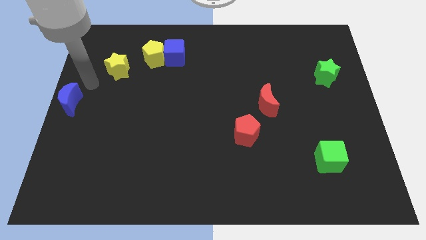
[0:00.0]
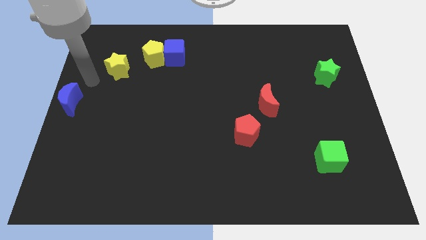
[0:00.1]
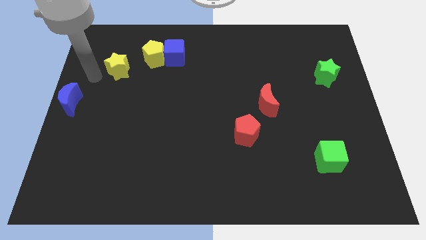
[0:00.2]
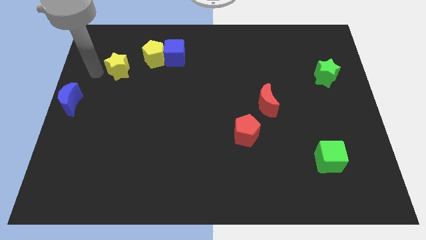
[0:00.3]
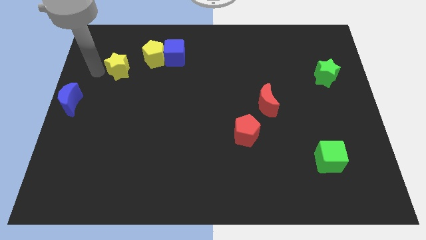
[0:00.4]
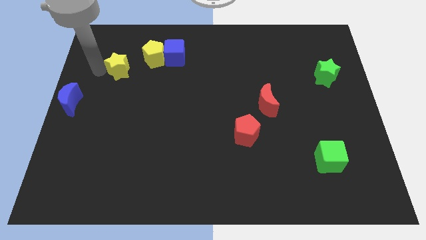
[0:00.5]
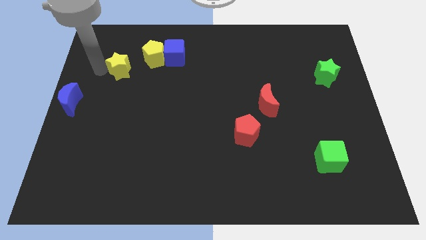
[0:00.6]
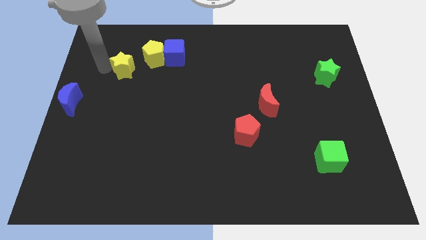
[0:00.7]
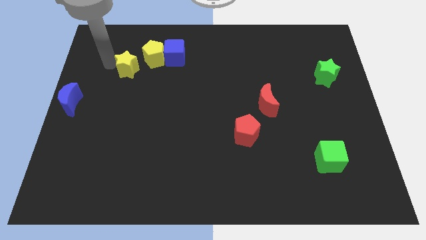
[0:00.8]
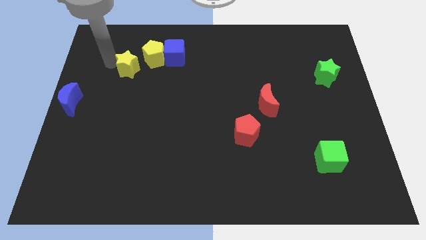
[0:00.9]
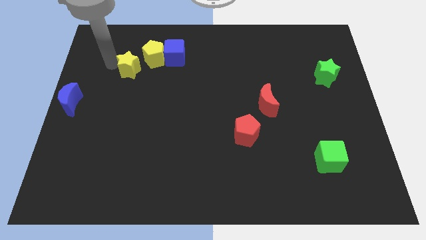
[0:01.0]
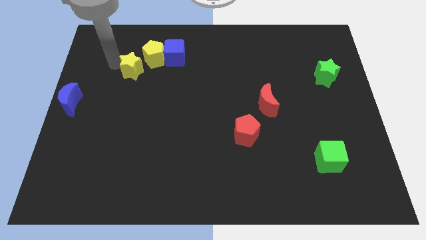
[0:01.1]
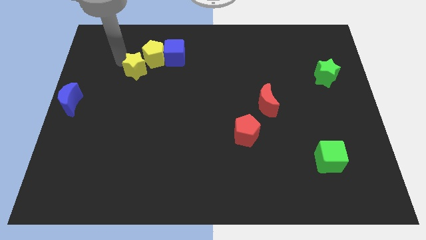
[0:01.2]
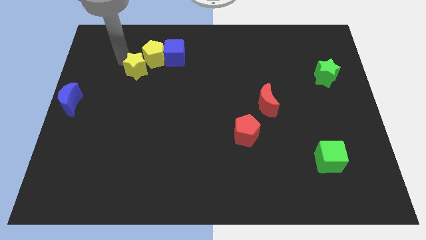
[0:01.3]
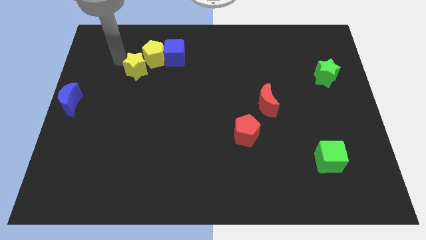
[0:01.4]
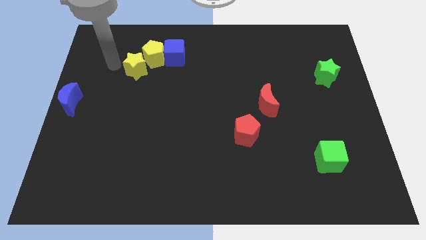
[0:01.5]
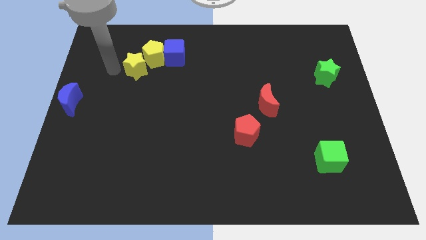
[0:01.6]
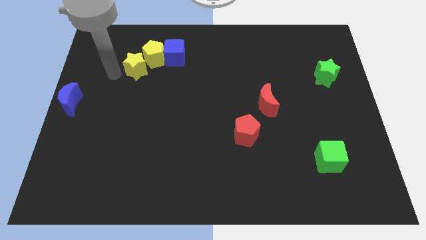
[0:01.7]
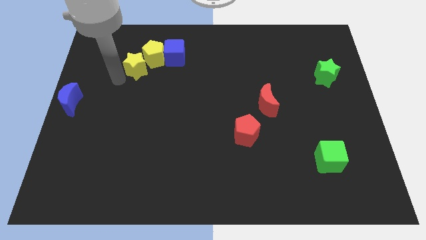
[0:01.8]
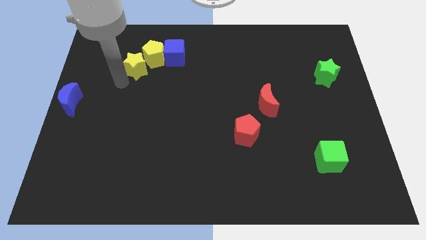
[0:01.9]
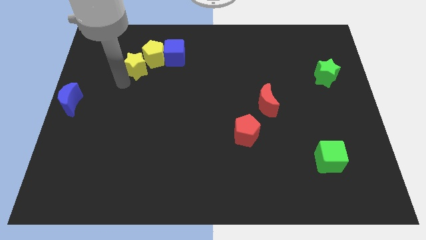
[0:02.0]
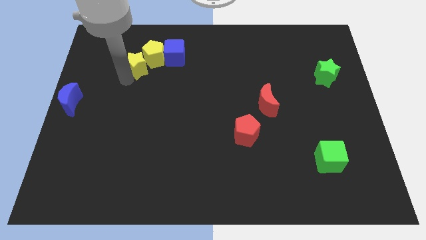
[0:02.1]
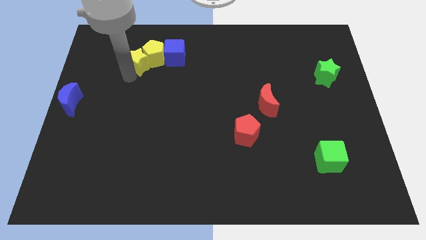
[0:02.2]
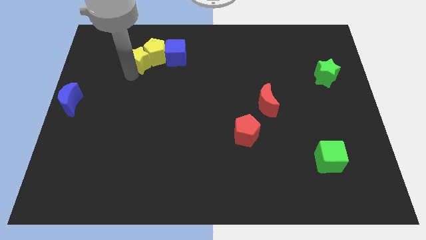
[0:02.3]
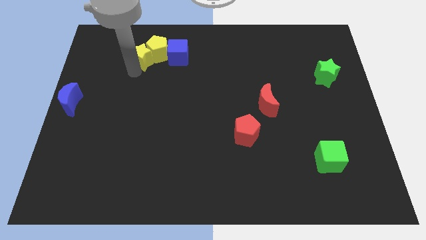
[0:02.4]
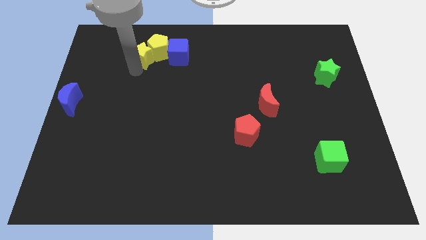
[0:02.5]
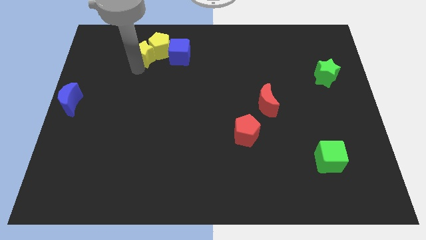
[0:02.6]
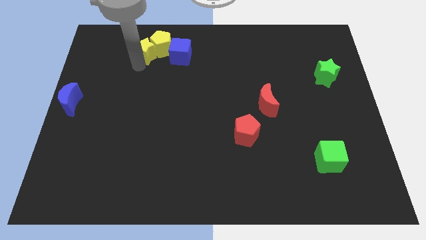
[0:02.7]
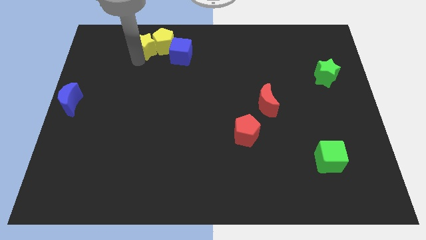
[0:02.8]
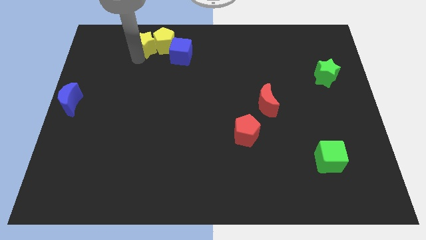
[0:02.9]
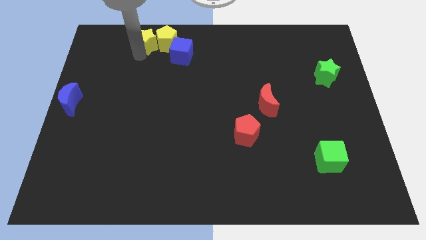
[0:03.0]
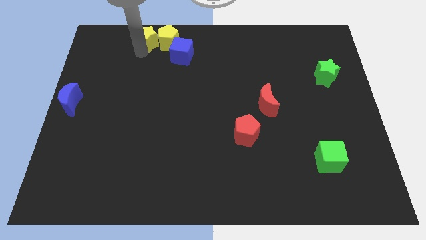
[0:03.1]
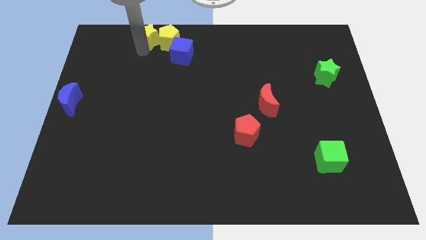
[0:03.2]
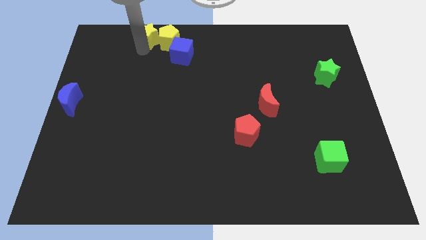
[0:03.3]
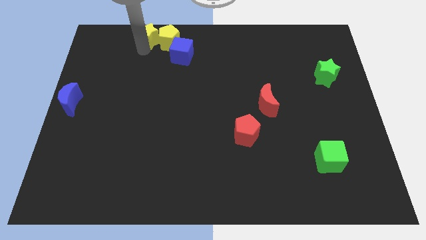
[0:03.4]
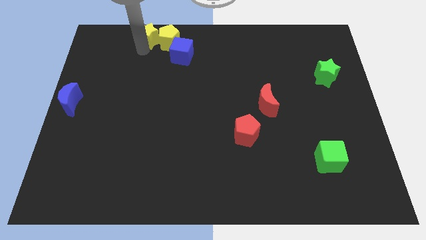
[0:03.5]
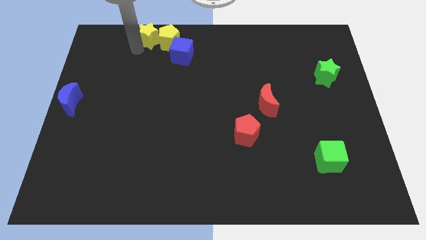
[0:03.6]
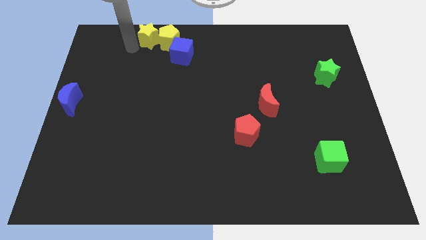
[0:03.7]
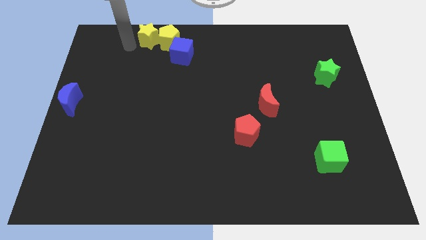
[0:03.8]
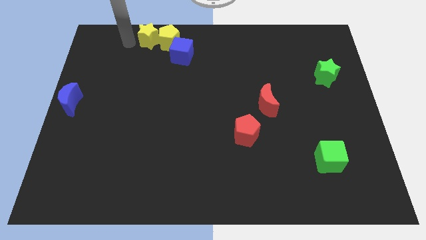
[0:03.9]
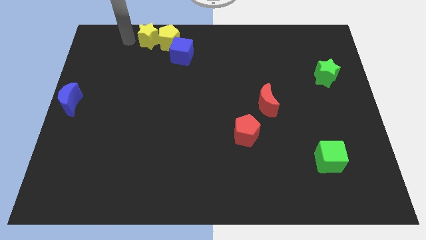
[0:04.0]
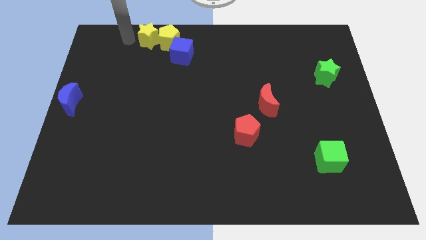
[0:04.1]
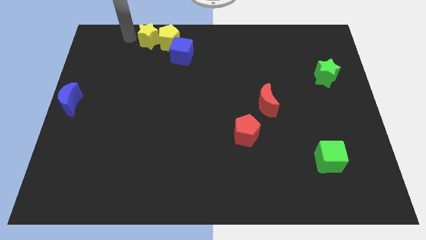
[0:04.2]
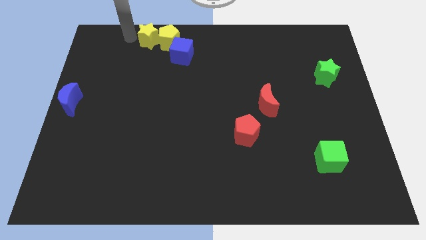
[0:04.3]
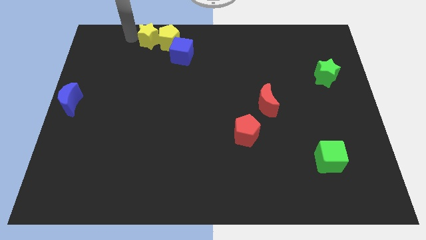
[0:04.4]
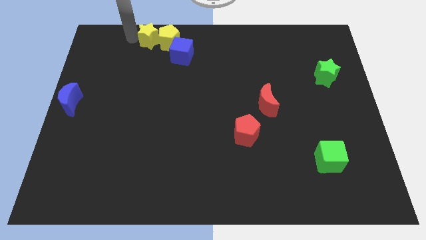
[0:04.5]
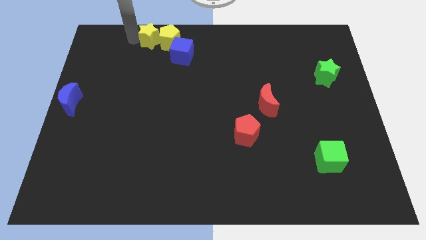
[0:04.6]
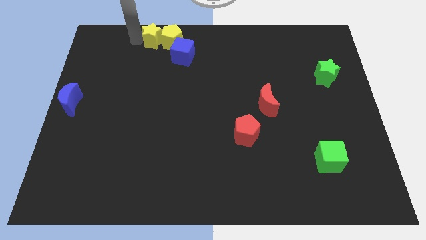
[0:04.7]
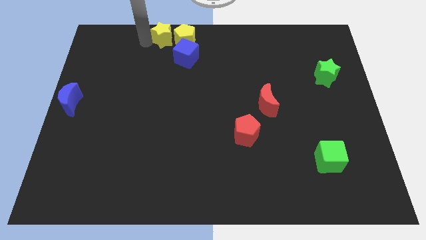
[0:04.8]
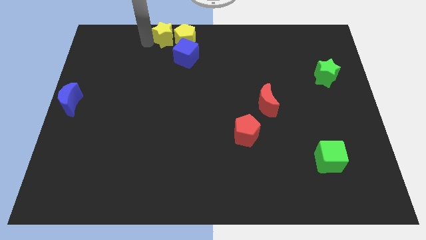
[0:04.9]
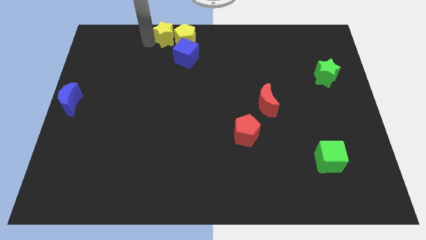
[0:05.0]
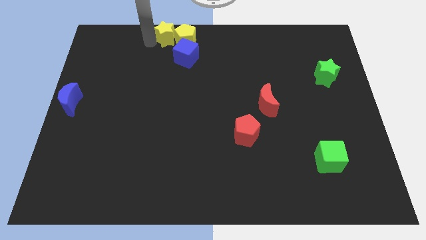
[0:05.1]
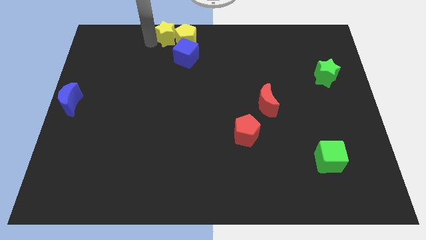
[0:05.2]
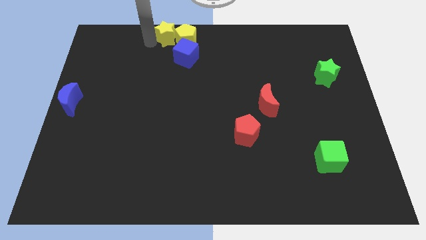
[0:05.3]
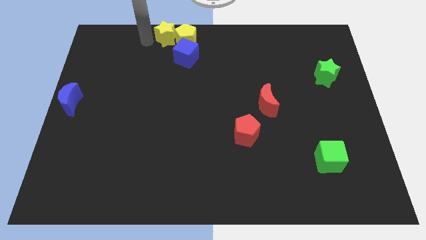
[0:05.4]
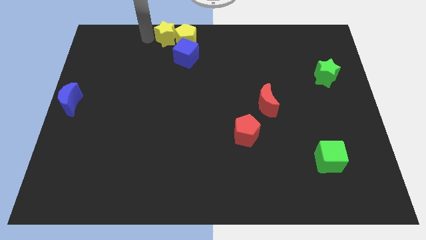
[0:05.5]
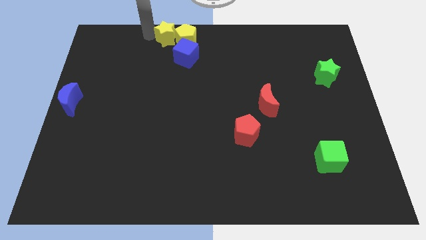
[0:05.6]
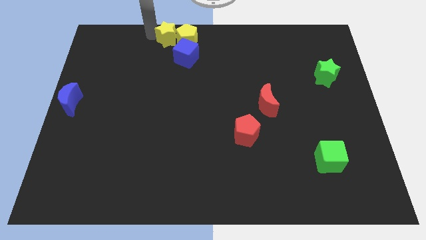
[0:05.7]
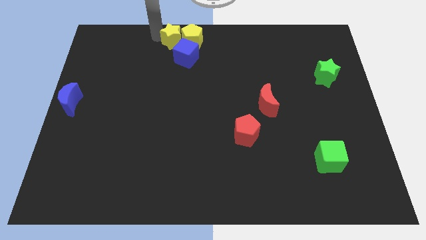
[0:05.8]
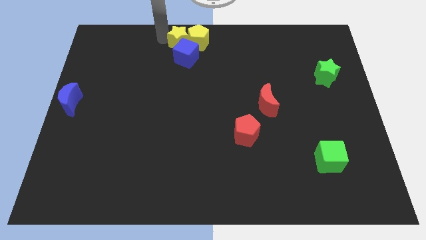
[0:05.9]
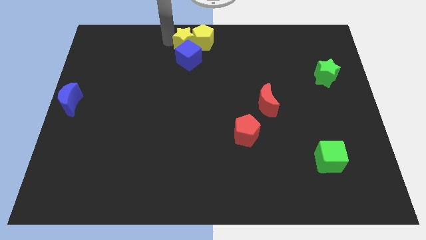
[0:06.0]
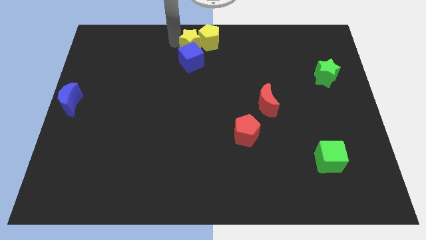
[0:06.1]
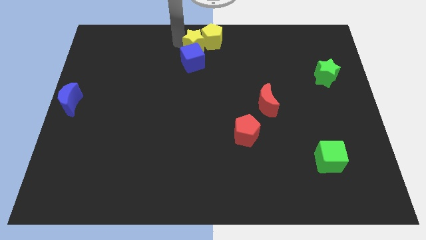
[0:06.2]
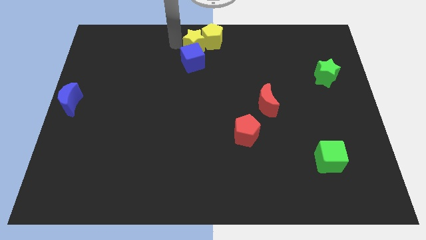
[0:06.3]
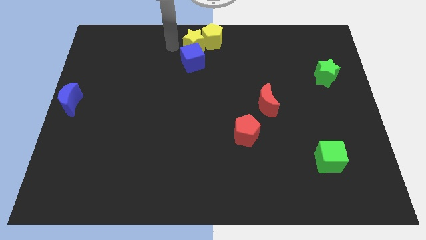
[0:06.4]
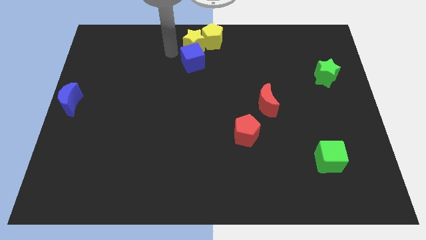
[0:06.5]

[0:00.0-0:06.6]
push the yellow star to the top center of the board

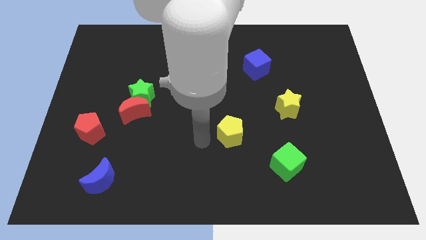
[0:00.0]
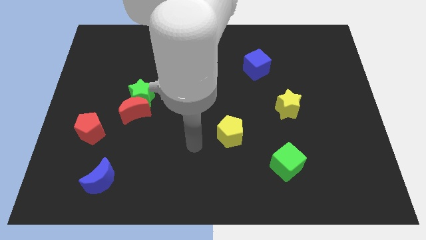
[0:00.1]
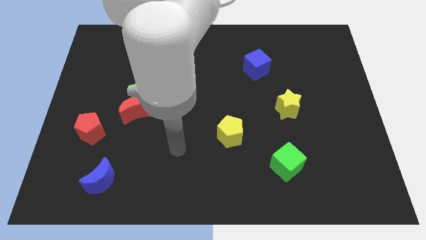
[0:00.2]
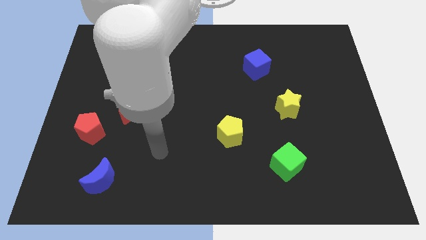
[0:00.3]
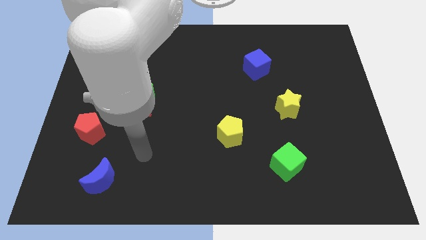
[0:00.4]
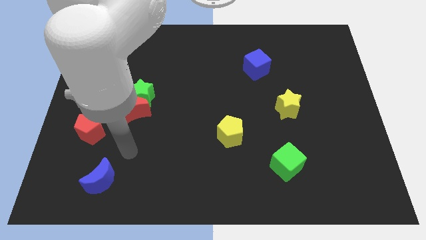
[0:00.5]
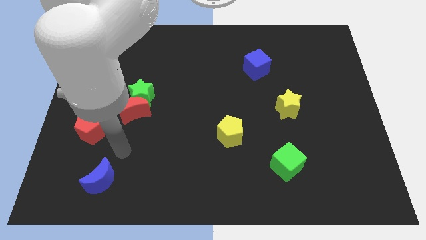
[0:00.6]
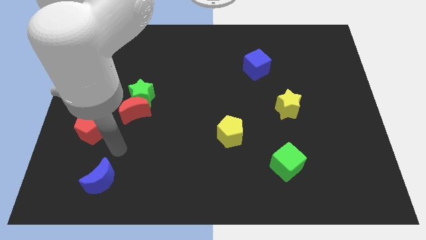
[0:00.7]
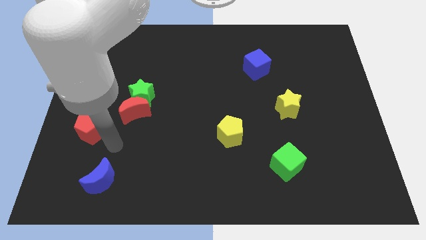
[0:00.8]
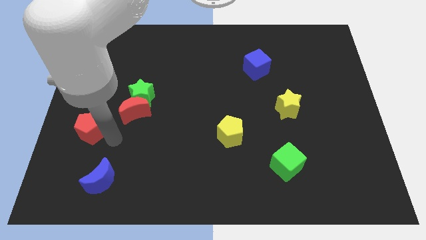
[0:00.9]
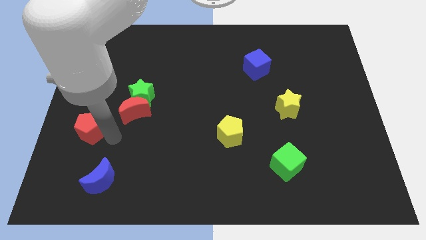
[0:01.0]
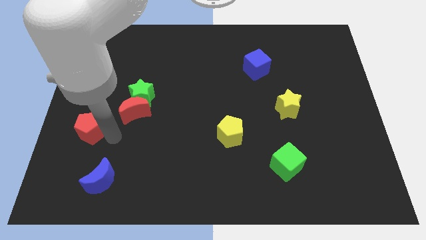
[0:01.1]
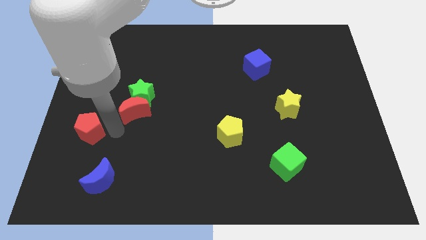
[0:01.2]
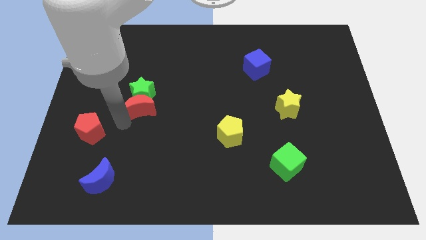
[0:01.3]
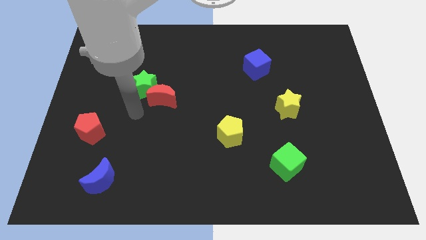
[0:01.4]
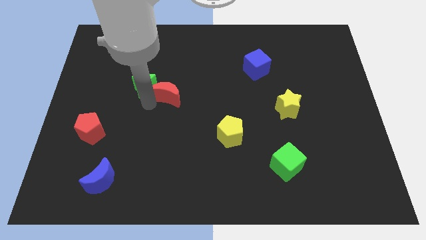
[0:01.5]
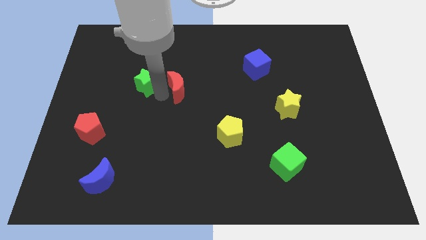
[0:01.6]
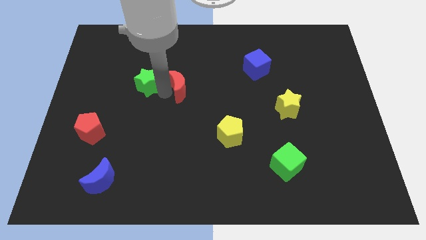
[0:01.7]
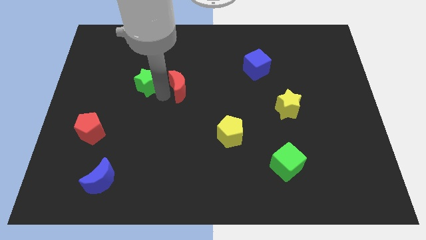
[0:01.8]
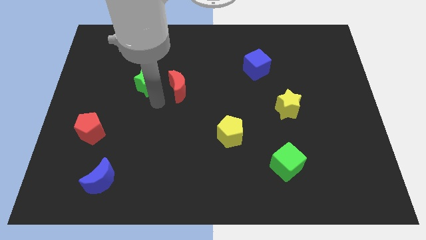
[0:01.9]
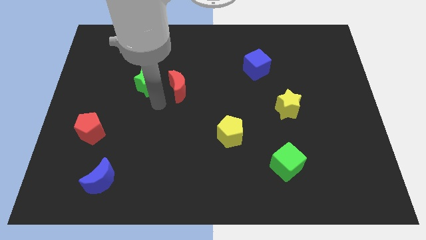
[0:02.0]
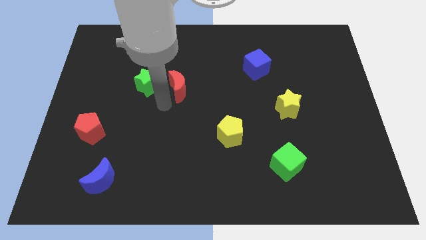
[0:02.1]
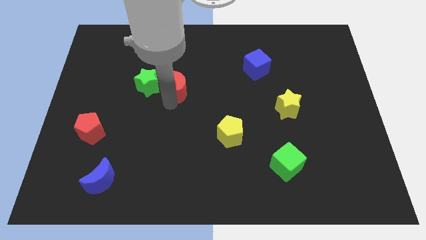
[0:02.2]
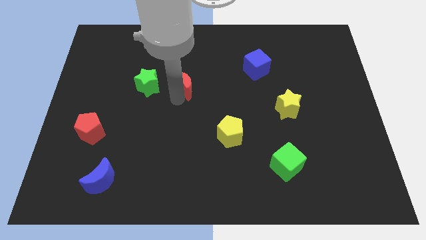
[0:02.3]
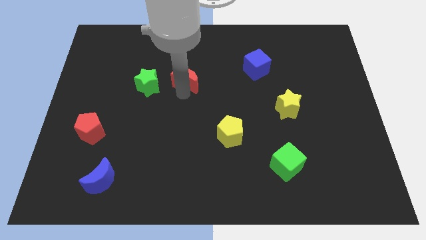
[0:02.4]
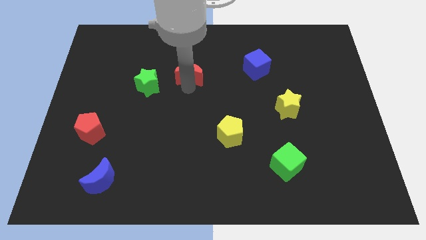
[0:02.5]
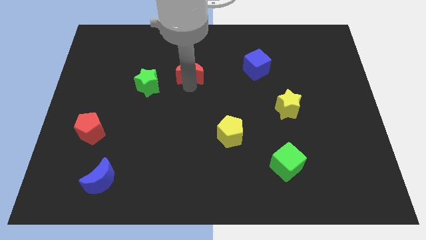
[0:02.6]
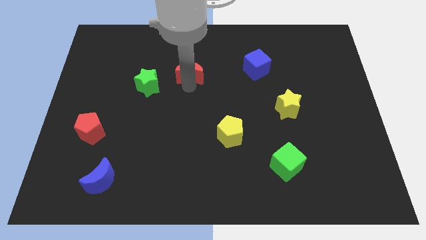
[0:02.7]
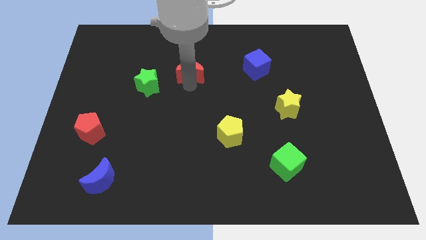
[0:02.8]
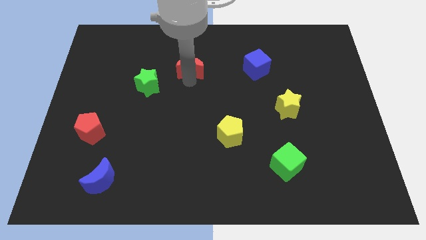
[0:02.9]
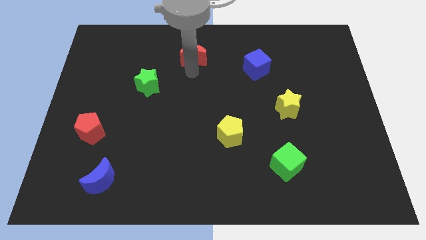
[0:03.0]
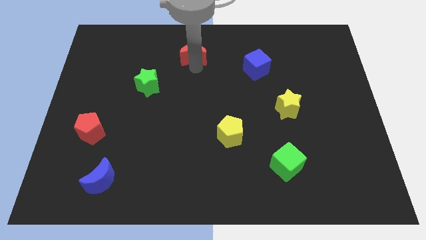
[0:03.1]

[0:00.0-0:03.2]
separate red crescent from the green star
